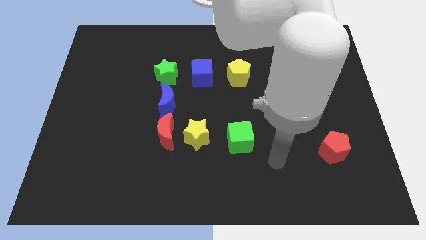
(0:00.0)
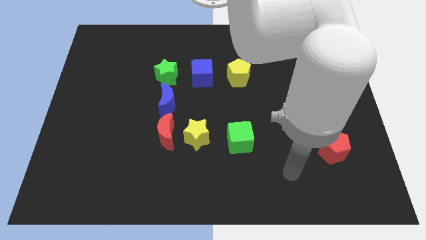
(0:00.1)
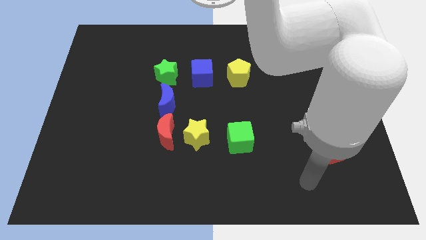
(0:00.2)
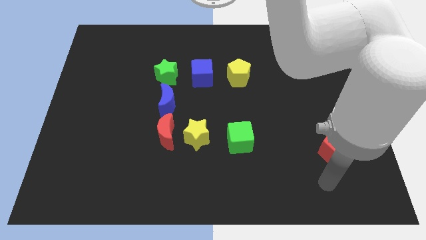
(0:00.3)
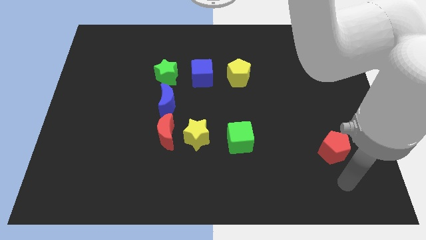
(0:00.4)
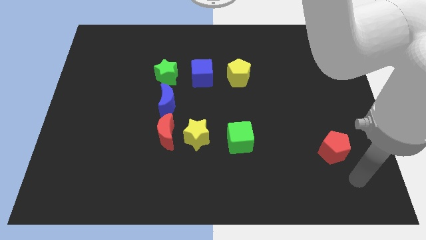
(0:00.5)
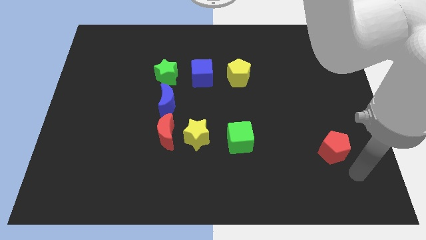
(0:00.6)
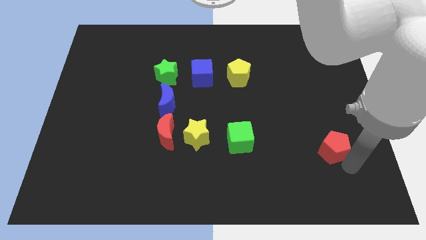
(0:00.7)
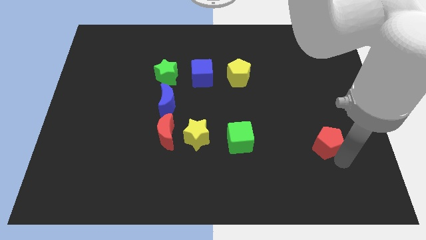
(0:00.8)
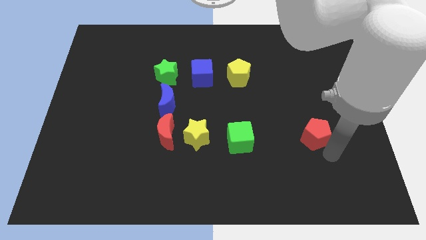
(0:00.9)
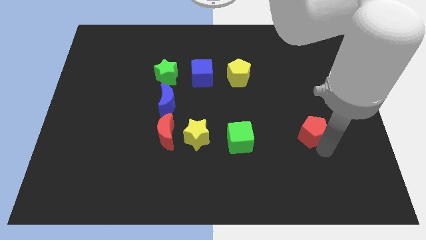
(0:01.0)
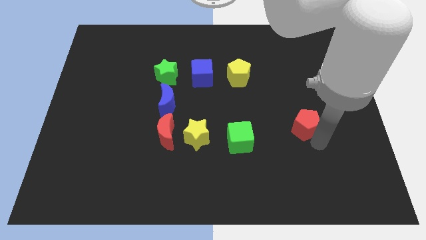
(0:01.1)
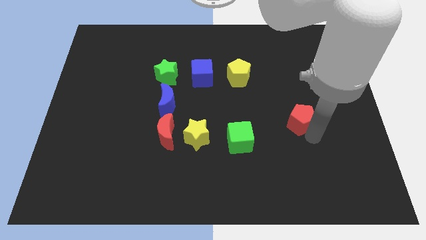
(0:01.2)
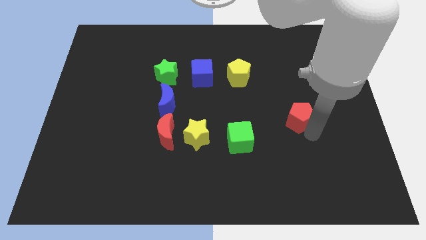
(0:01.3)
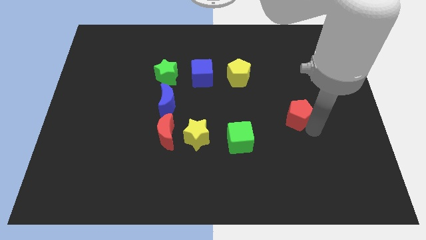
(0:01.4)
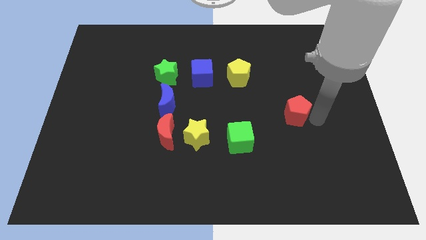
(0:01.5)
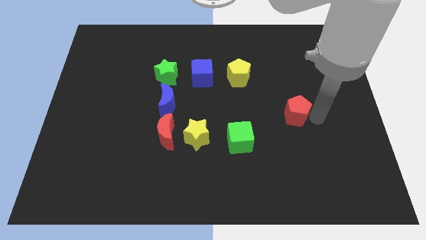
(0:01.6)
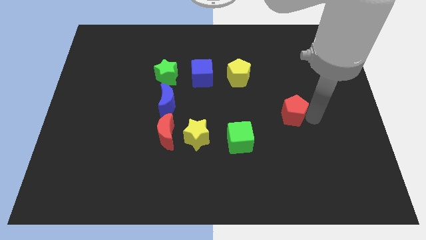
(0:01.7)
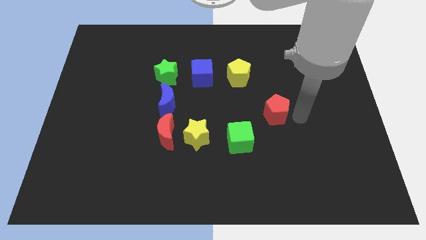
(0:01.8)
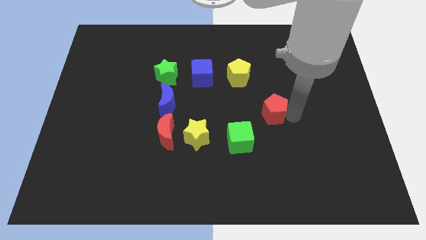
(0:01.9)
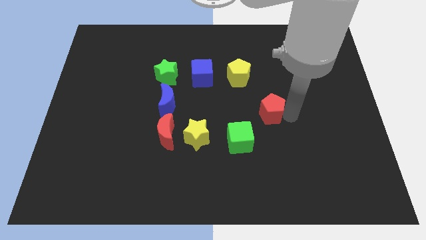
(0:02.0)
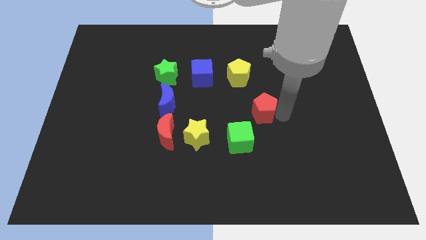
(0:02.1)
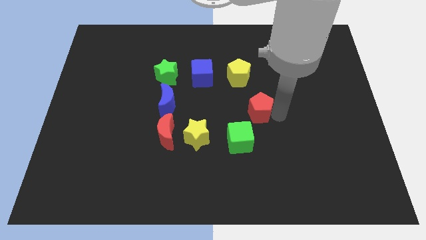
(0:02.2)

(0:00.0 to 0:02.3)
move the red pentagon slightly towards top right of the green star

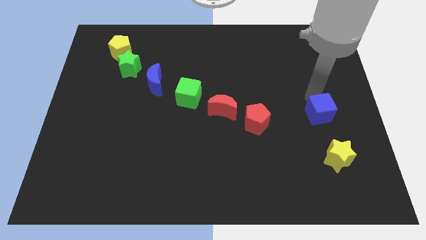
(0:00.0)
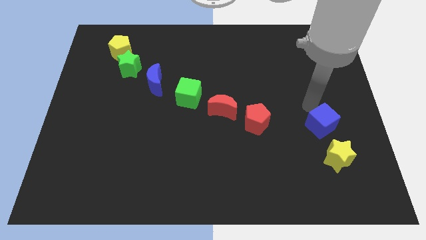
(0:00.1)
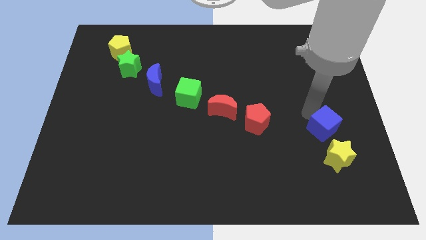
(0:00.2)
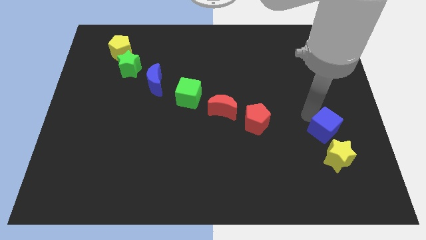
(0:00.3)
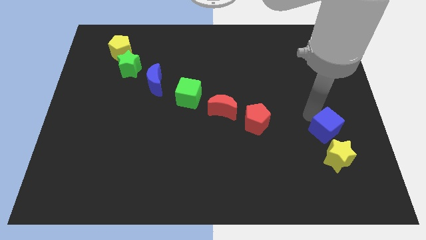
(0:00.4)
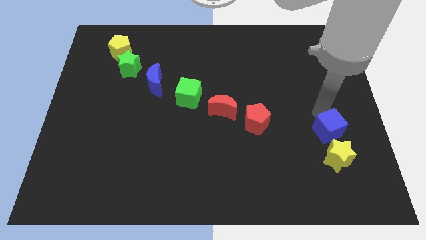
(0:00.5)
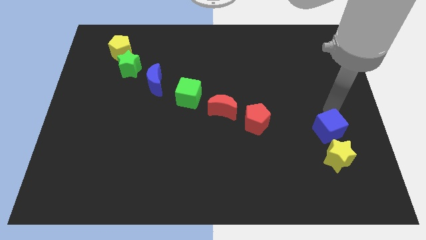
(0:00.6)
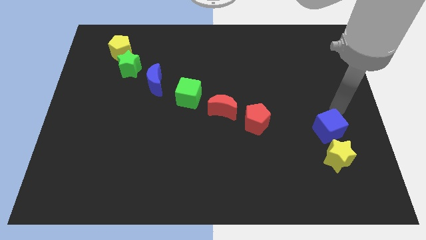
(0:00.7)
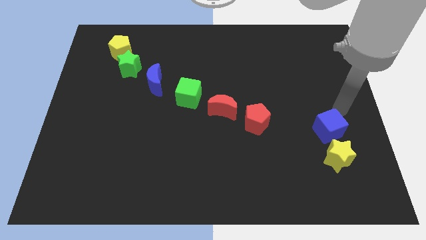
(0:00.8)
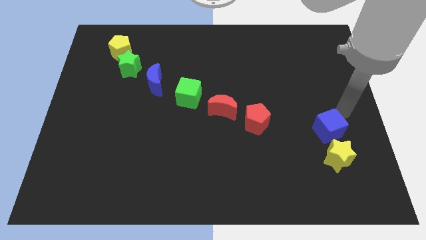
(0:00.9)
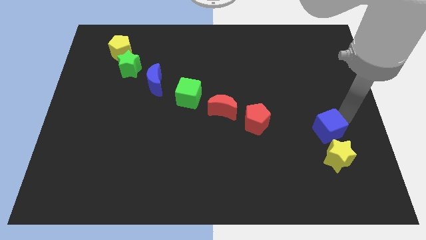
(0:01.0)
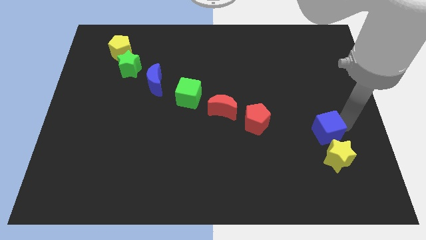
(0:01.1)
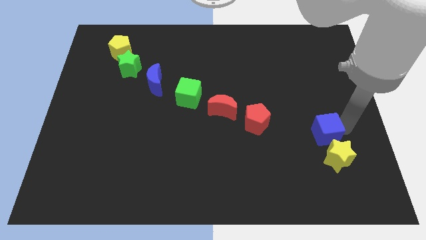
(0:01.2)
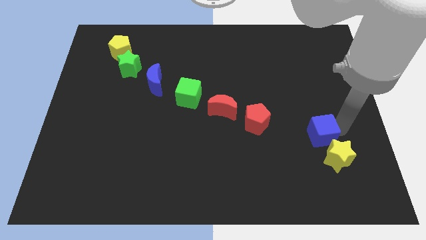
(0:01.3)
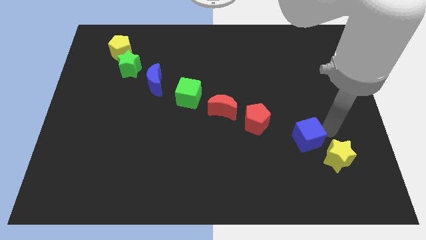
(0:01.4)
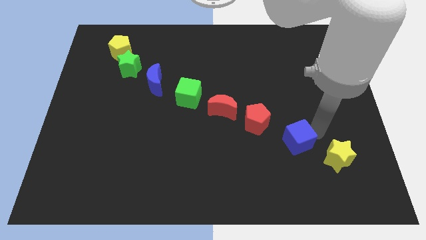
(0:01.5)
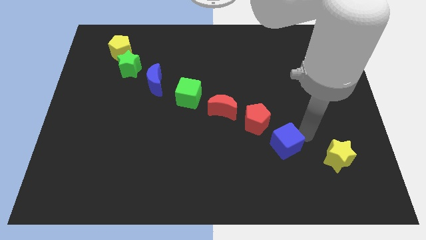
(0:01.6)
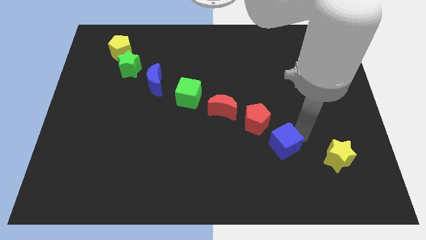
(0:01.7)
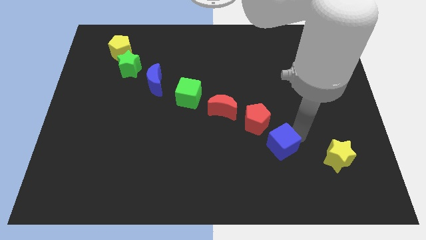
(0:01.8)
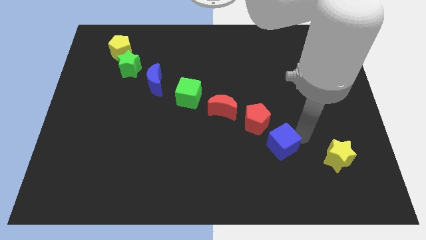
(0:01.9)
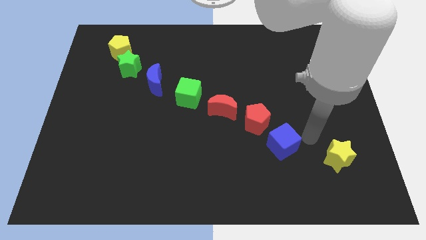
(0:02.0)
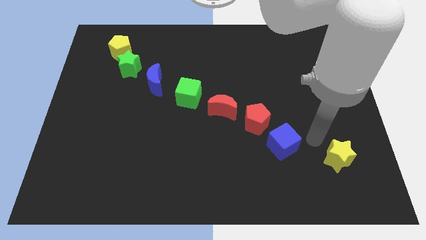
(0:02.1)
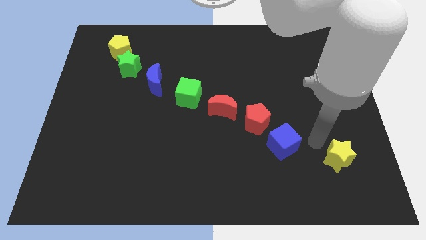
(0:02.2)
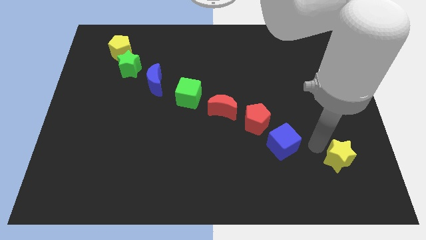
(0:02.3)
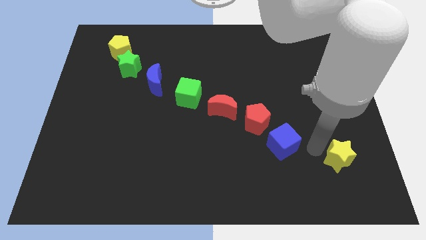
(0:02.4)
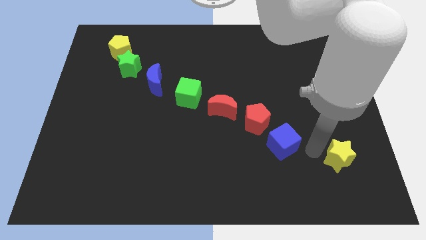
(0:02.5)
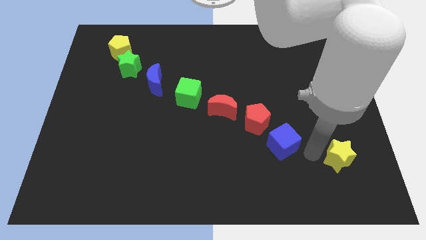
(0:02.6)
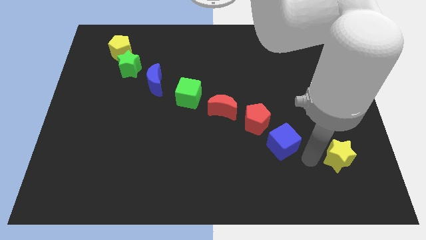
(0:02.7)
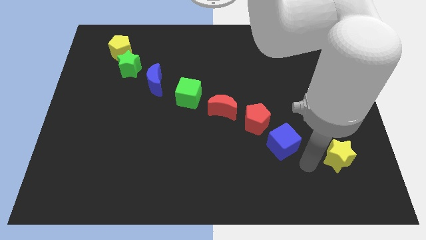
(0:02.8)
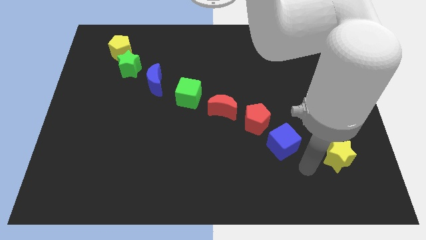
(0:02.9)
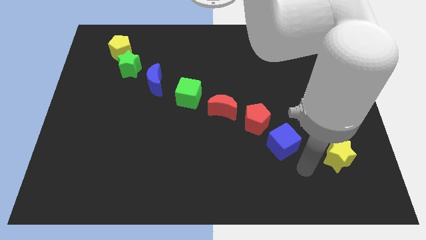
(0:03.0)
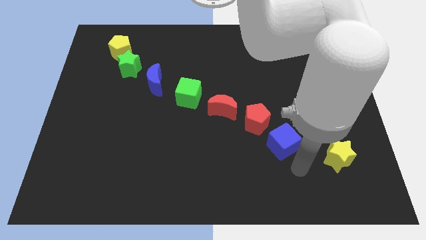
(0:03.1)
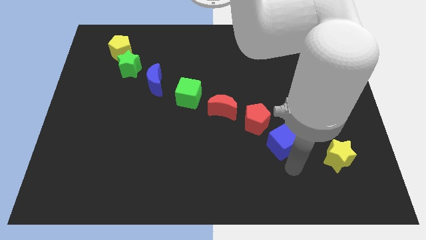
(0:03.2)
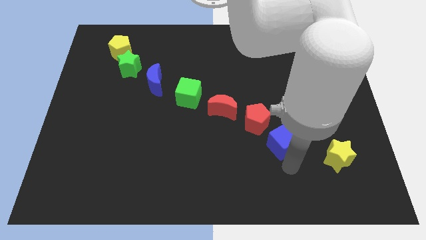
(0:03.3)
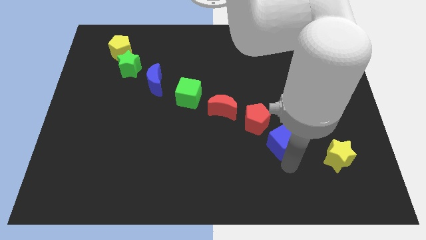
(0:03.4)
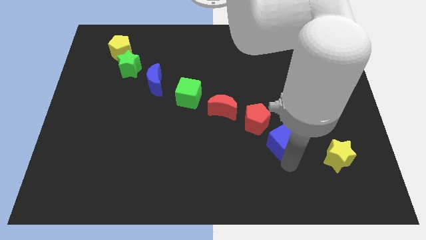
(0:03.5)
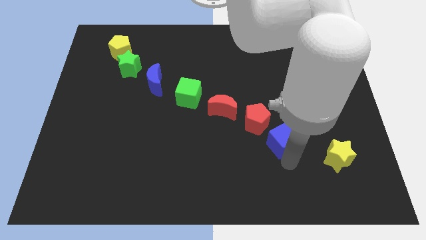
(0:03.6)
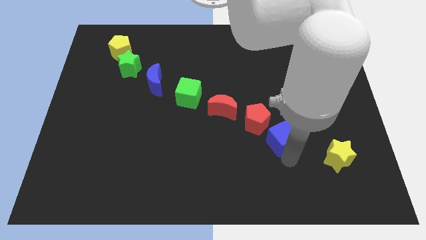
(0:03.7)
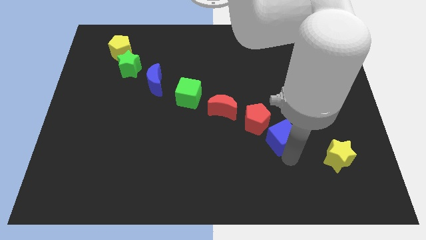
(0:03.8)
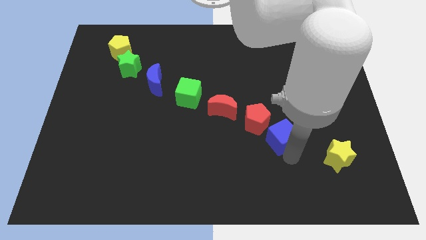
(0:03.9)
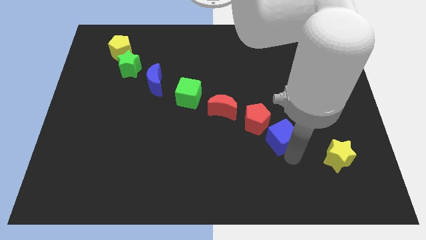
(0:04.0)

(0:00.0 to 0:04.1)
push the blue cube to the right of the red pentagon

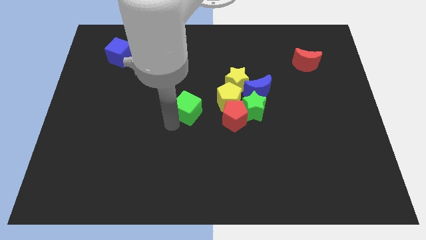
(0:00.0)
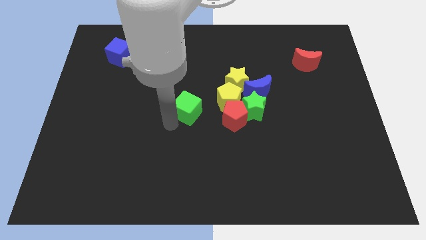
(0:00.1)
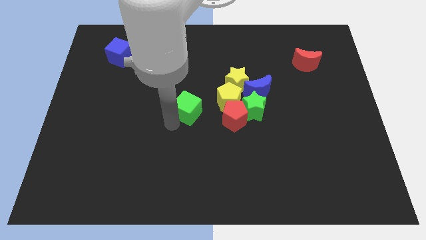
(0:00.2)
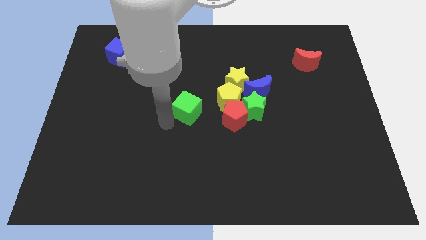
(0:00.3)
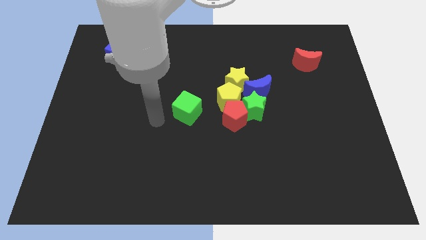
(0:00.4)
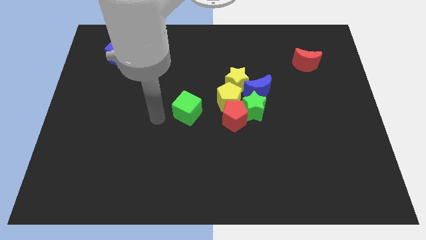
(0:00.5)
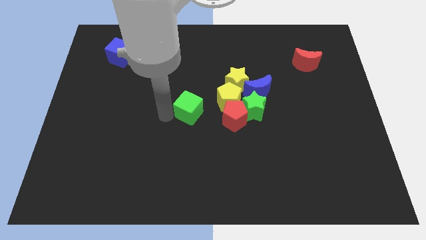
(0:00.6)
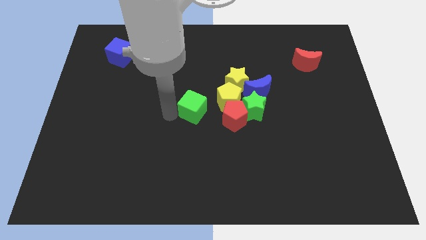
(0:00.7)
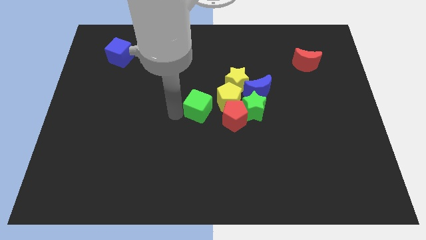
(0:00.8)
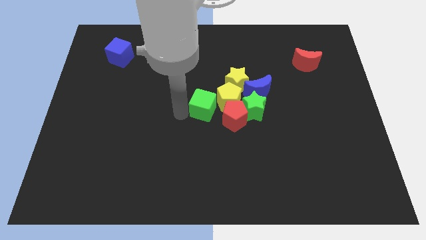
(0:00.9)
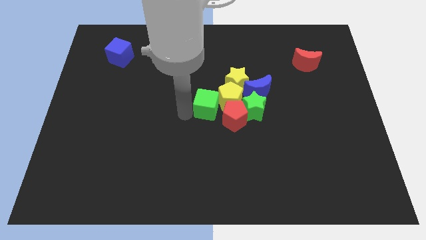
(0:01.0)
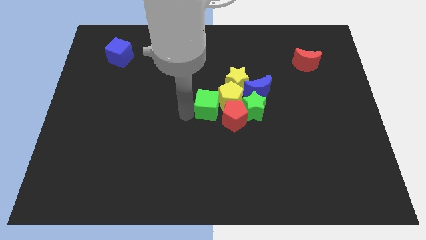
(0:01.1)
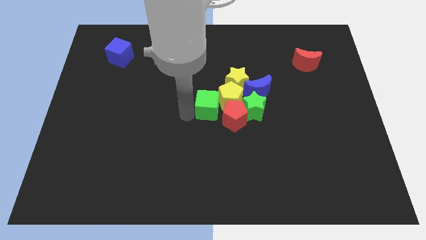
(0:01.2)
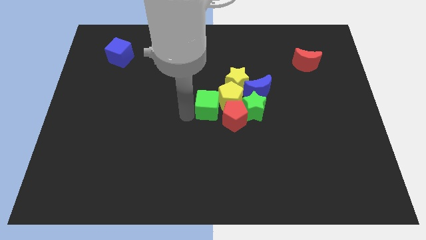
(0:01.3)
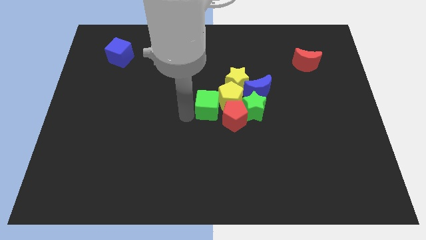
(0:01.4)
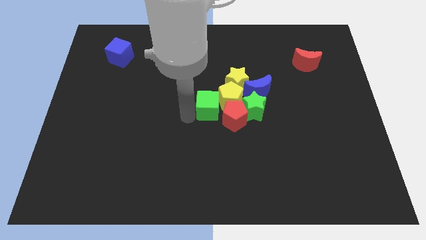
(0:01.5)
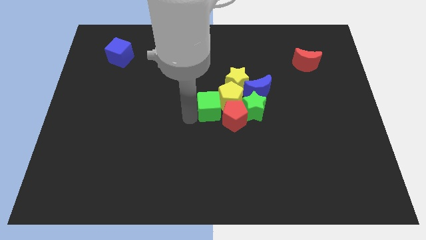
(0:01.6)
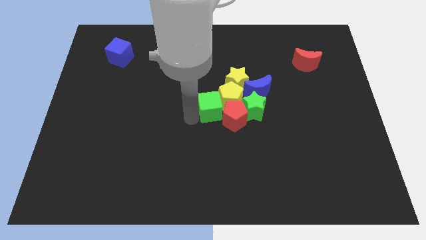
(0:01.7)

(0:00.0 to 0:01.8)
place the green cube to the right side of the blocks

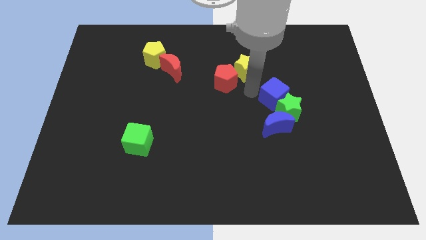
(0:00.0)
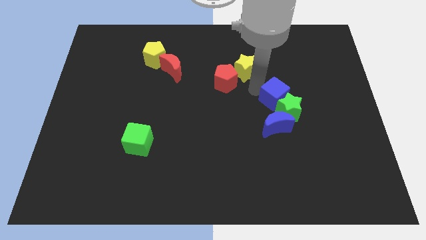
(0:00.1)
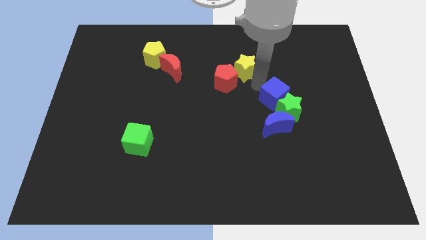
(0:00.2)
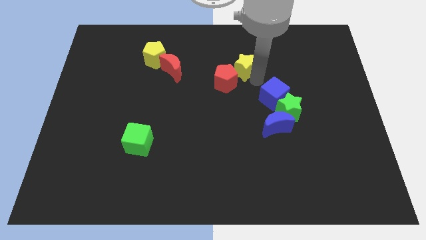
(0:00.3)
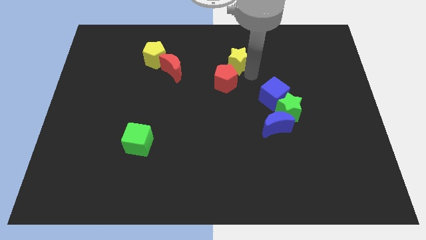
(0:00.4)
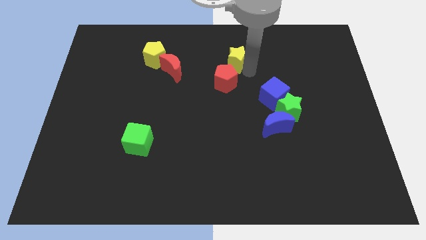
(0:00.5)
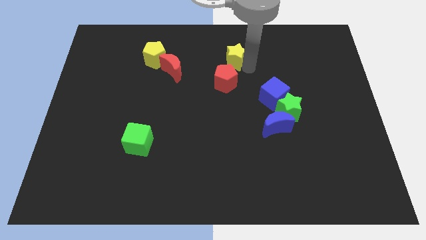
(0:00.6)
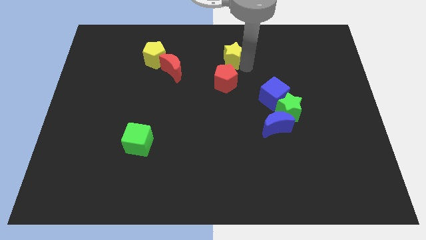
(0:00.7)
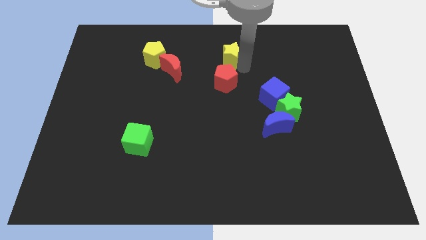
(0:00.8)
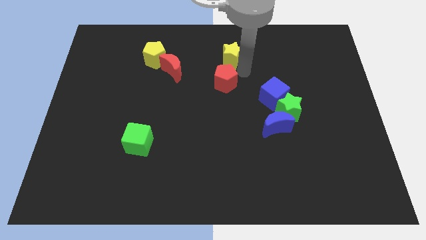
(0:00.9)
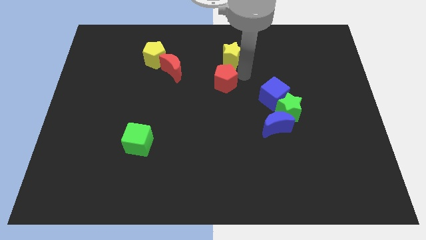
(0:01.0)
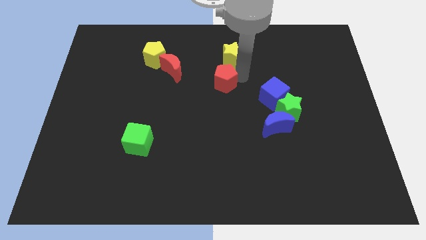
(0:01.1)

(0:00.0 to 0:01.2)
place the yellow star at the top of the red pentagon
